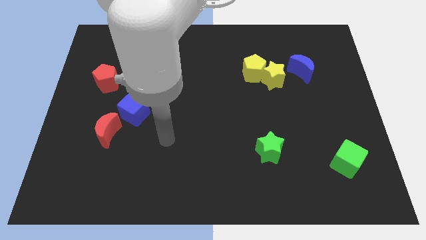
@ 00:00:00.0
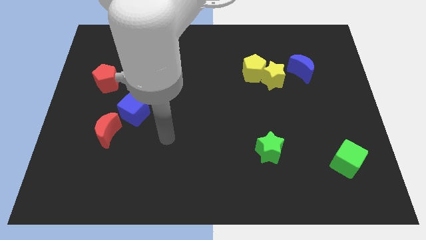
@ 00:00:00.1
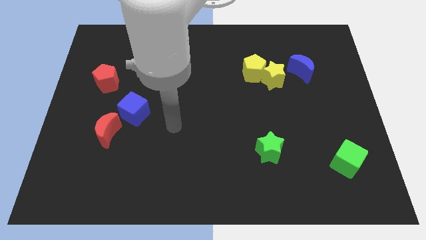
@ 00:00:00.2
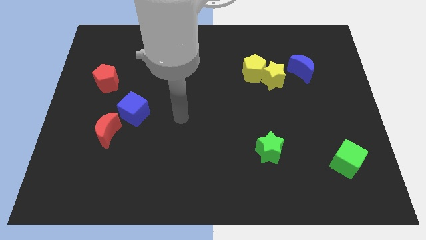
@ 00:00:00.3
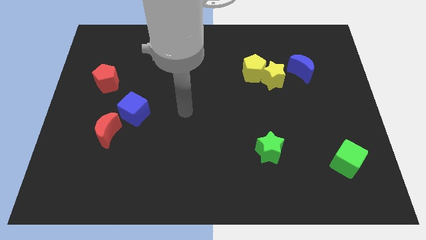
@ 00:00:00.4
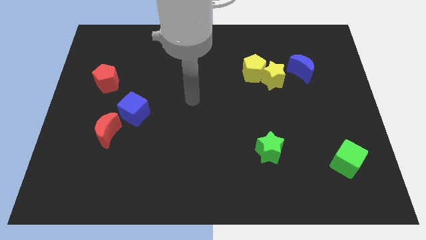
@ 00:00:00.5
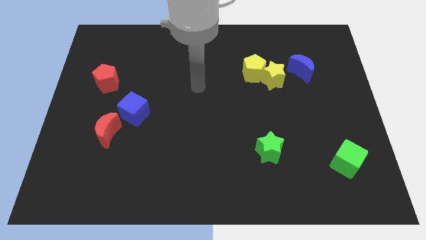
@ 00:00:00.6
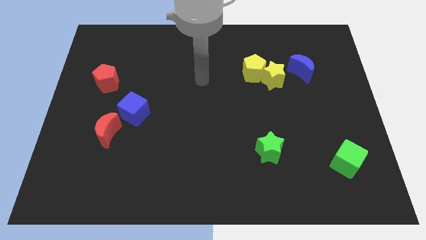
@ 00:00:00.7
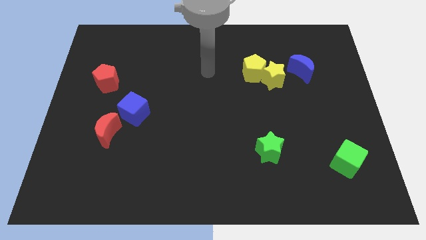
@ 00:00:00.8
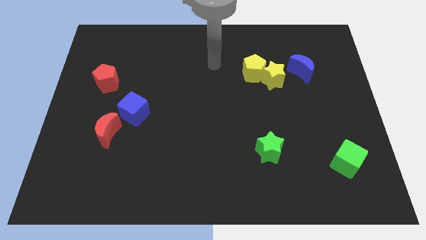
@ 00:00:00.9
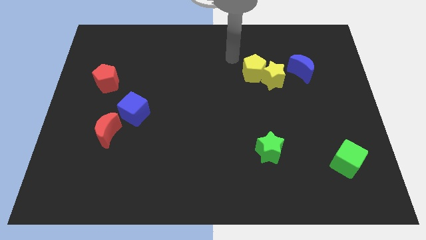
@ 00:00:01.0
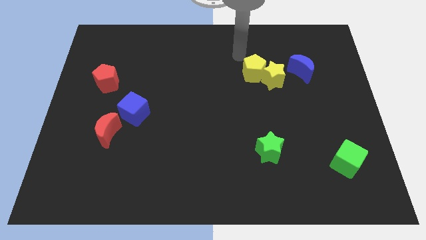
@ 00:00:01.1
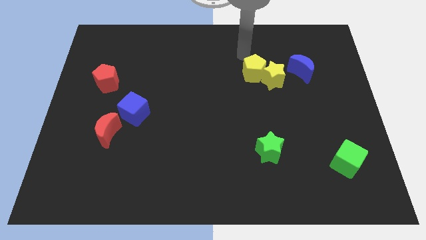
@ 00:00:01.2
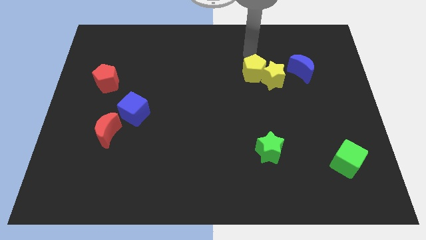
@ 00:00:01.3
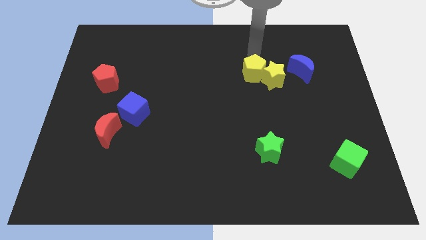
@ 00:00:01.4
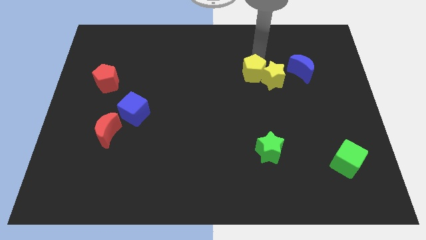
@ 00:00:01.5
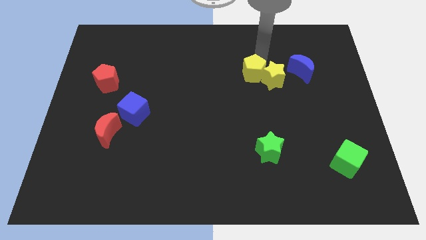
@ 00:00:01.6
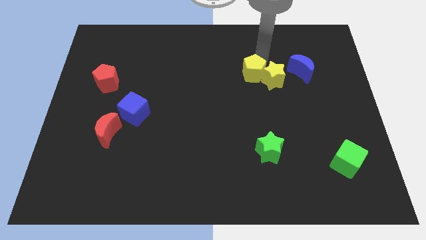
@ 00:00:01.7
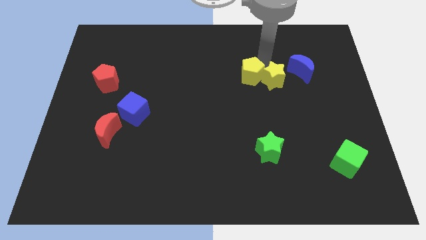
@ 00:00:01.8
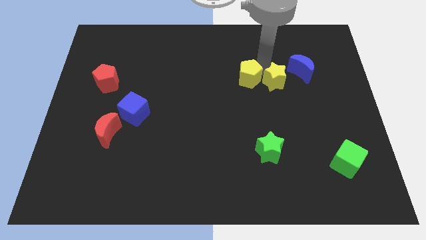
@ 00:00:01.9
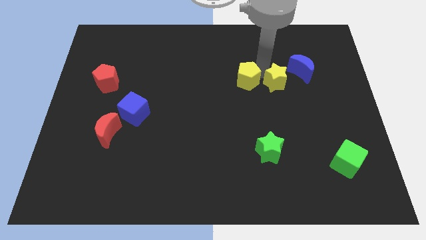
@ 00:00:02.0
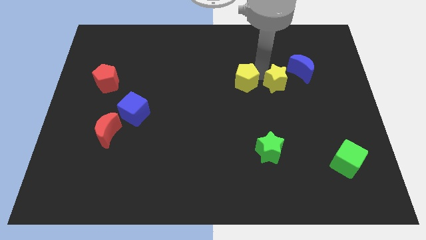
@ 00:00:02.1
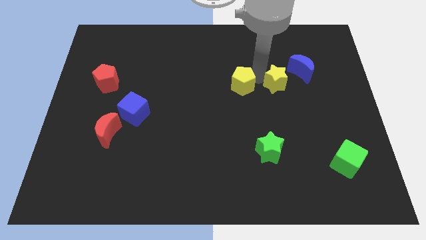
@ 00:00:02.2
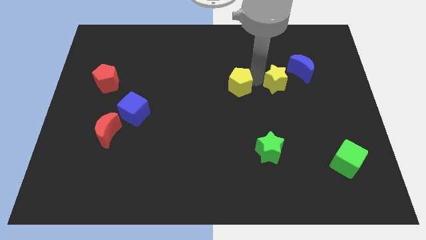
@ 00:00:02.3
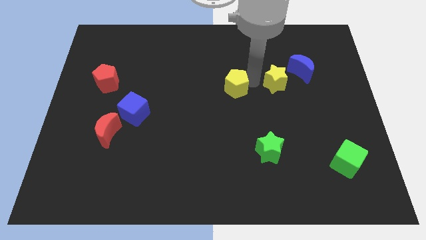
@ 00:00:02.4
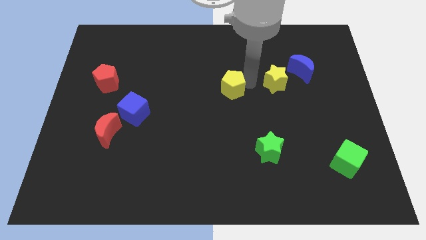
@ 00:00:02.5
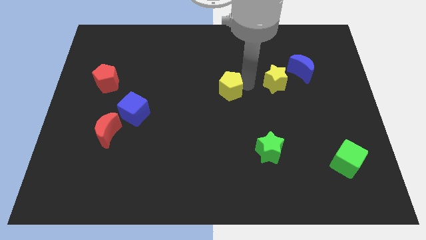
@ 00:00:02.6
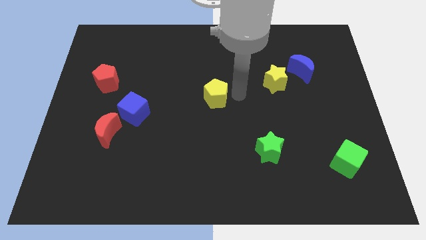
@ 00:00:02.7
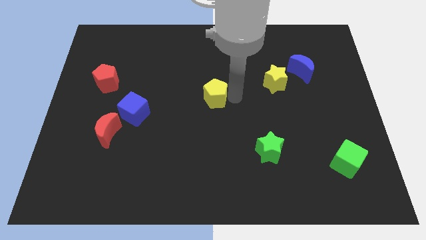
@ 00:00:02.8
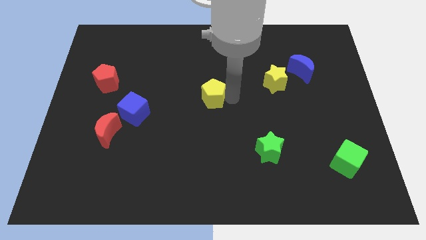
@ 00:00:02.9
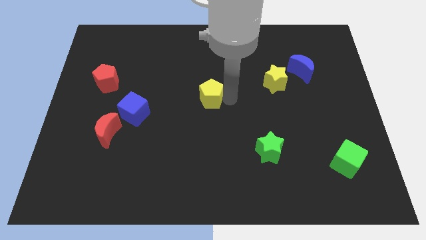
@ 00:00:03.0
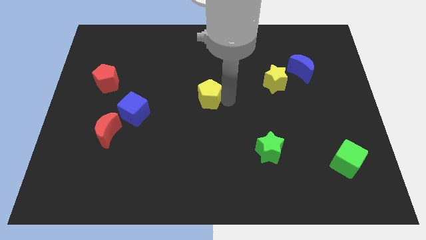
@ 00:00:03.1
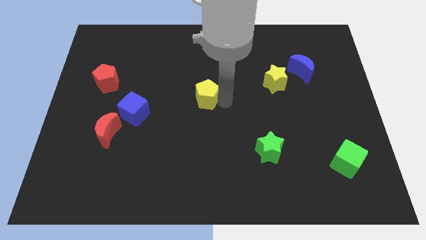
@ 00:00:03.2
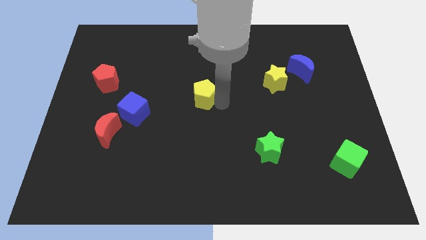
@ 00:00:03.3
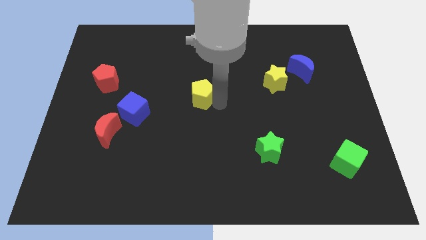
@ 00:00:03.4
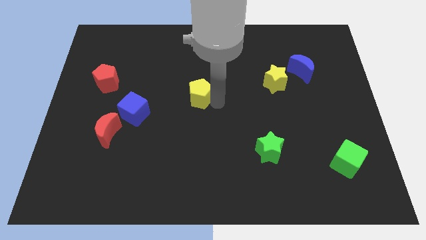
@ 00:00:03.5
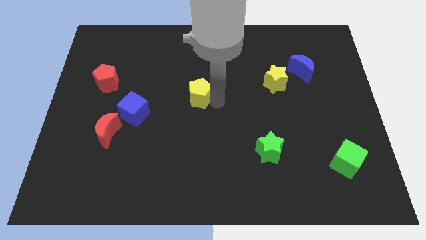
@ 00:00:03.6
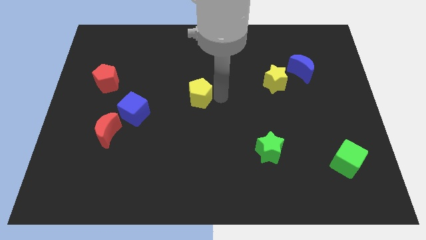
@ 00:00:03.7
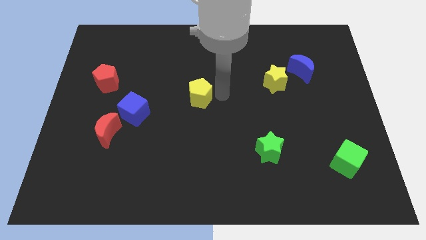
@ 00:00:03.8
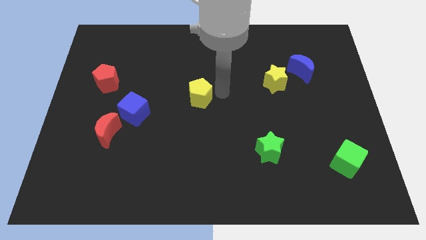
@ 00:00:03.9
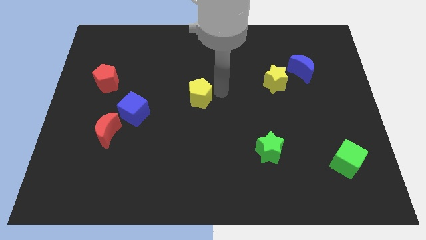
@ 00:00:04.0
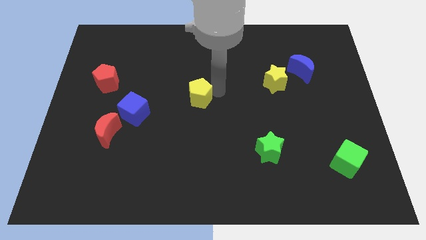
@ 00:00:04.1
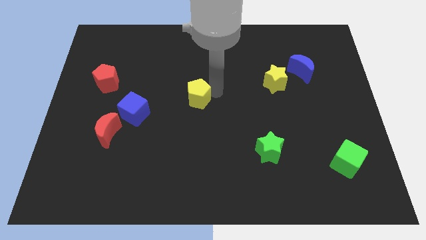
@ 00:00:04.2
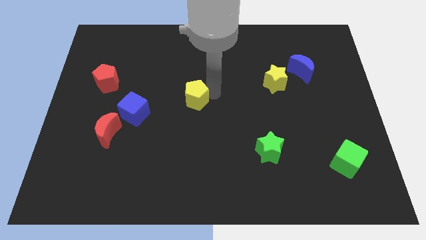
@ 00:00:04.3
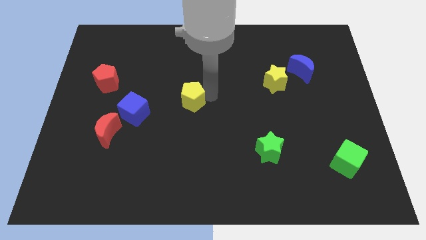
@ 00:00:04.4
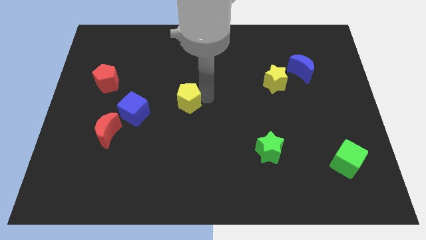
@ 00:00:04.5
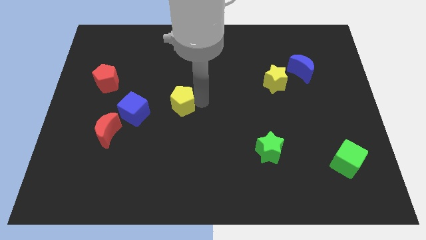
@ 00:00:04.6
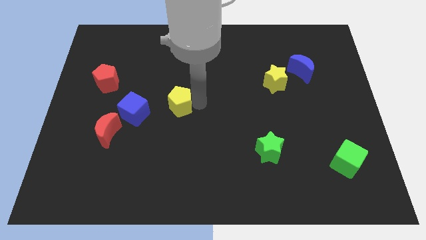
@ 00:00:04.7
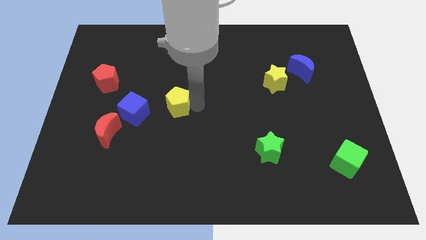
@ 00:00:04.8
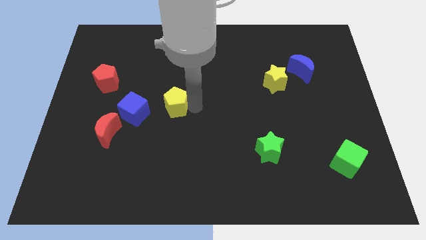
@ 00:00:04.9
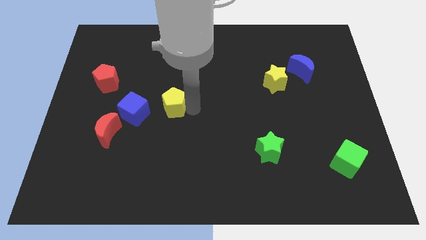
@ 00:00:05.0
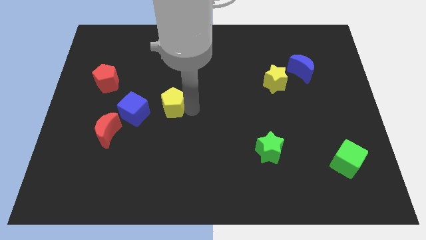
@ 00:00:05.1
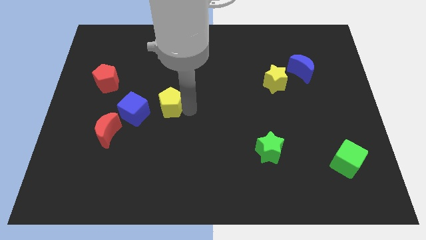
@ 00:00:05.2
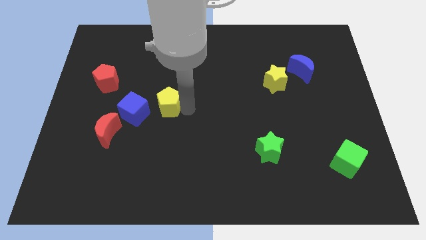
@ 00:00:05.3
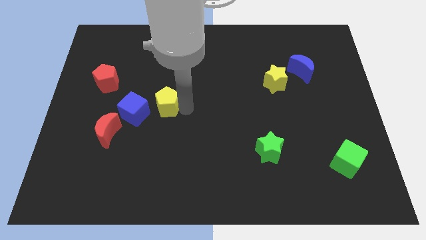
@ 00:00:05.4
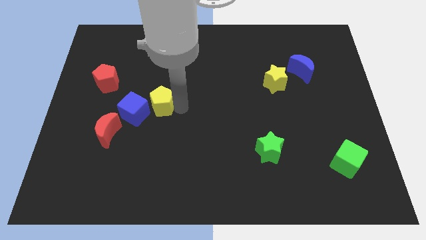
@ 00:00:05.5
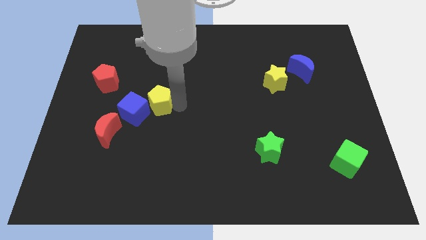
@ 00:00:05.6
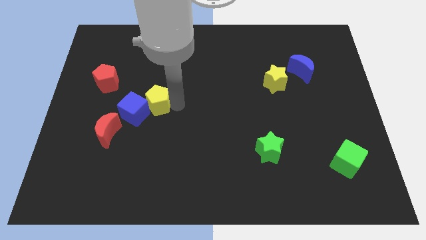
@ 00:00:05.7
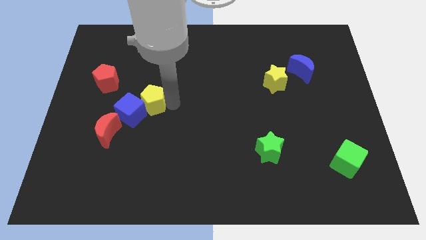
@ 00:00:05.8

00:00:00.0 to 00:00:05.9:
move the yellow pentagon close to the blue cube

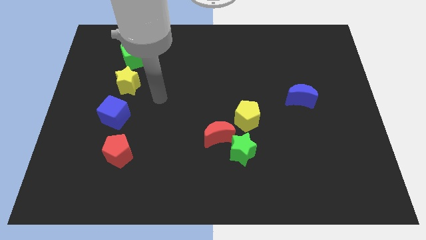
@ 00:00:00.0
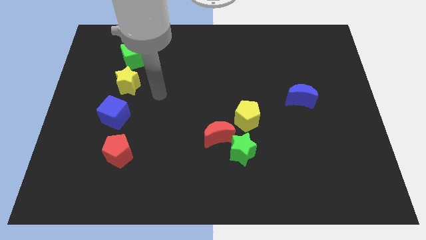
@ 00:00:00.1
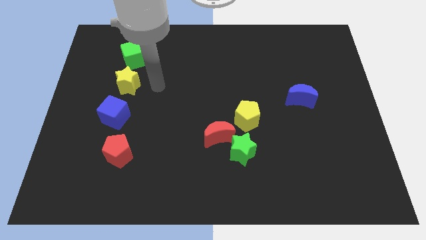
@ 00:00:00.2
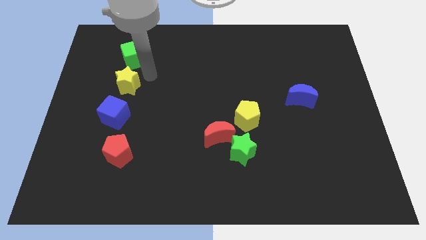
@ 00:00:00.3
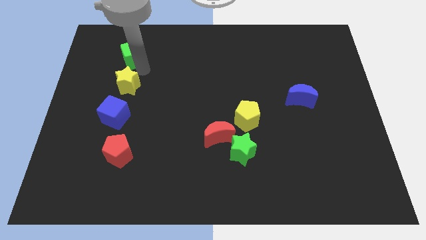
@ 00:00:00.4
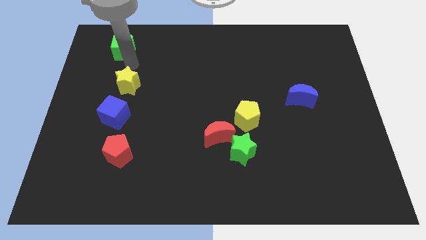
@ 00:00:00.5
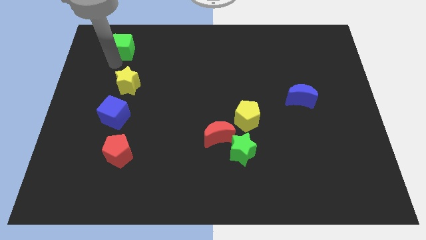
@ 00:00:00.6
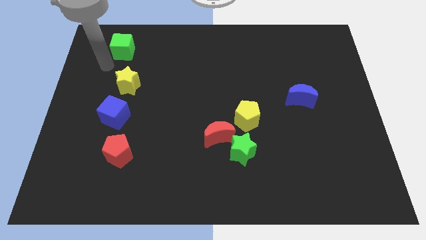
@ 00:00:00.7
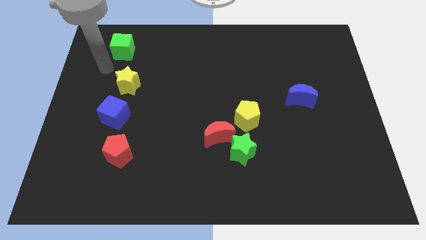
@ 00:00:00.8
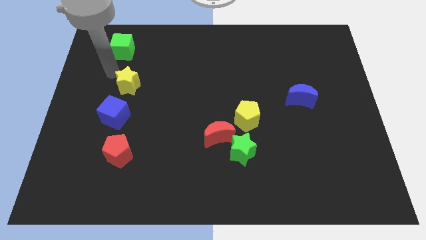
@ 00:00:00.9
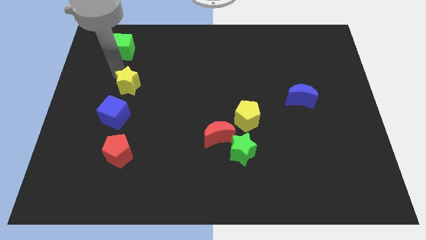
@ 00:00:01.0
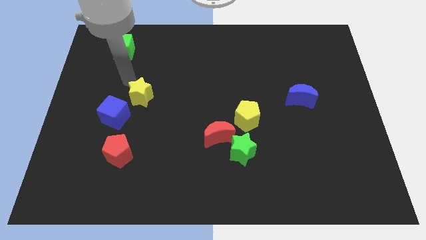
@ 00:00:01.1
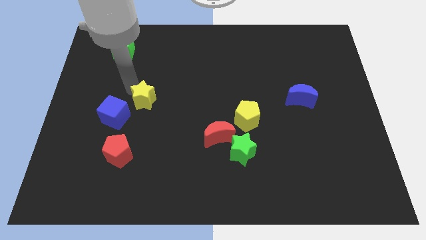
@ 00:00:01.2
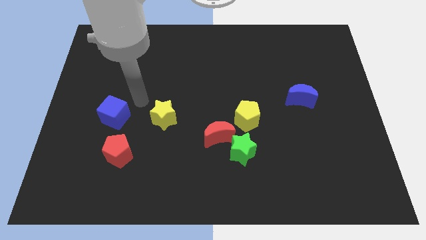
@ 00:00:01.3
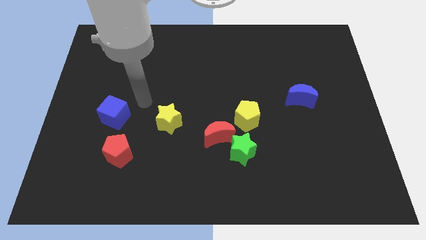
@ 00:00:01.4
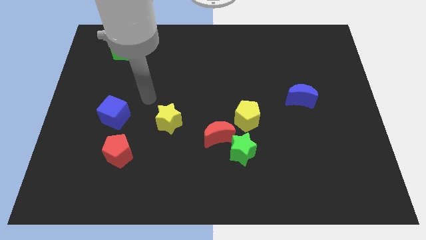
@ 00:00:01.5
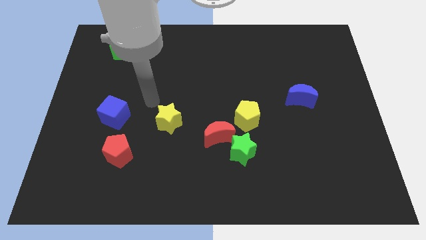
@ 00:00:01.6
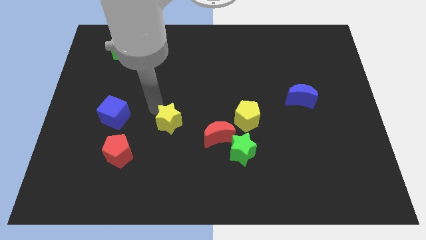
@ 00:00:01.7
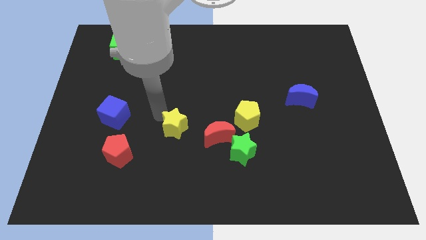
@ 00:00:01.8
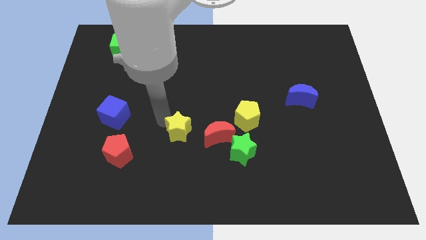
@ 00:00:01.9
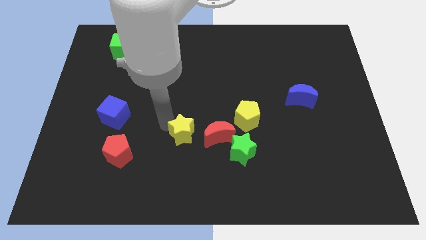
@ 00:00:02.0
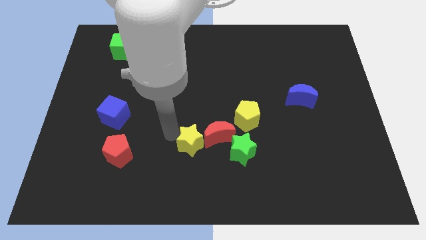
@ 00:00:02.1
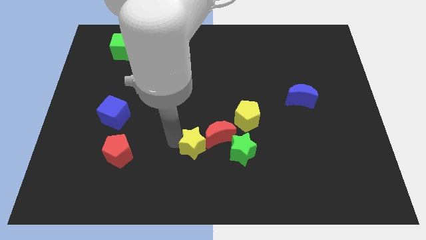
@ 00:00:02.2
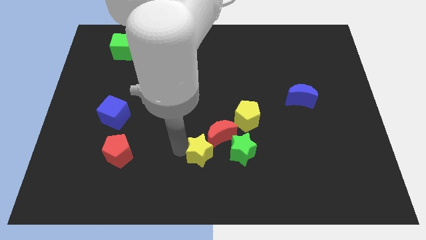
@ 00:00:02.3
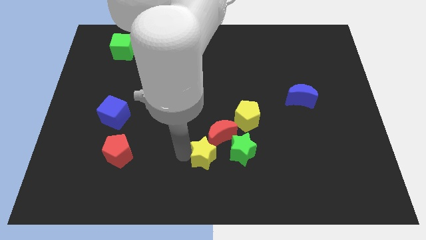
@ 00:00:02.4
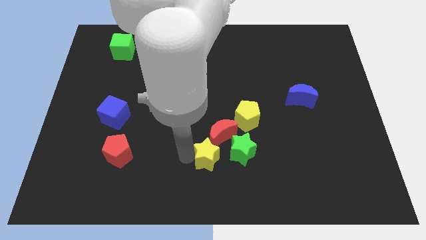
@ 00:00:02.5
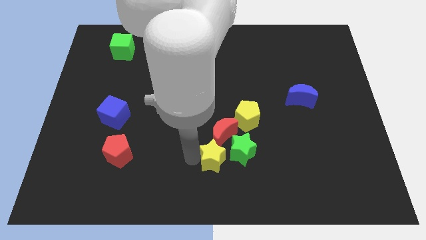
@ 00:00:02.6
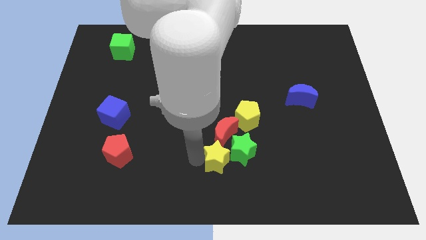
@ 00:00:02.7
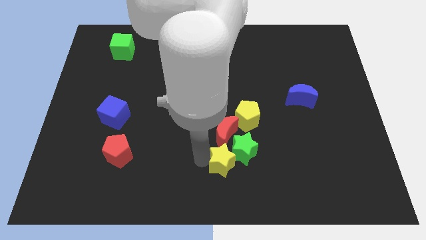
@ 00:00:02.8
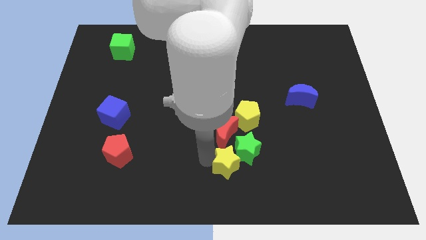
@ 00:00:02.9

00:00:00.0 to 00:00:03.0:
move the yellow star towards the green star
